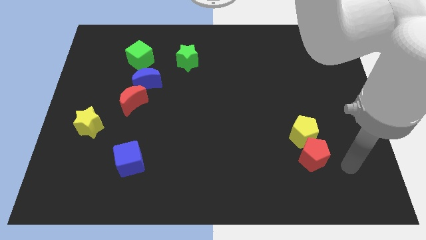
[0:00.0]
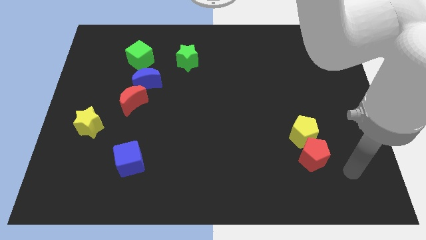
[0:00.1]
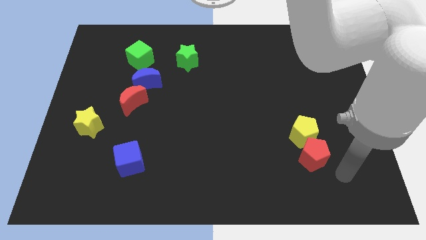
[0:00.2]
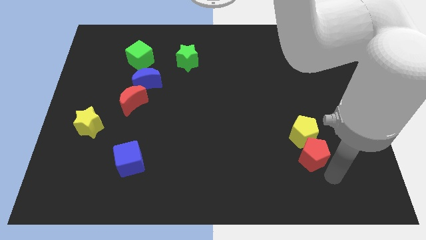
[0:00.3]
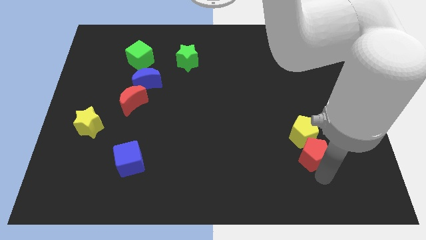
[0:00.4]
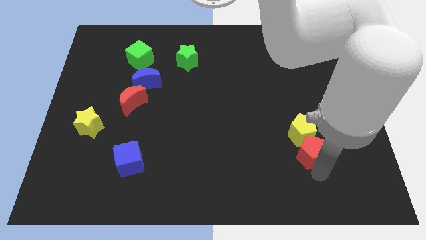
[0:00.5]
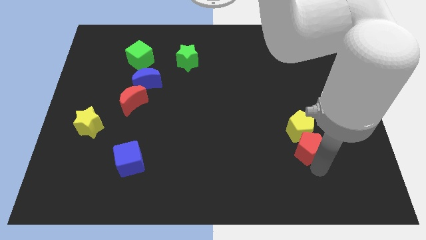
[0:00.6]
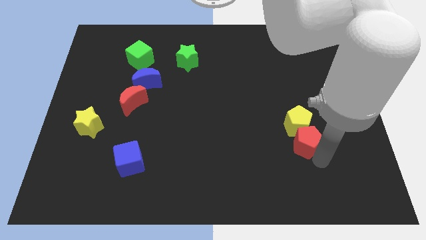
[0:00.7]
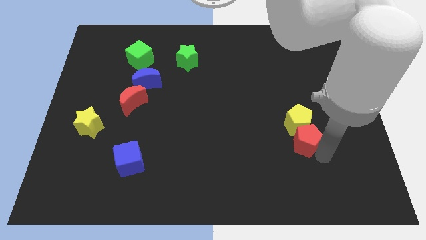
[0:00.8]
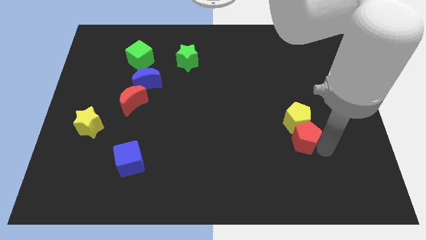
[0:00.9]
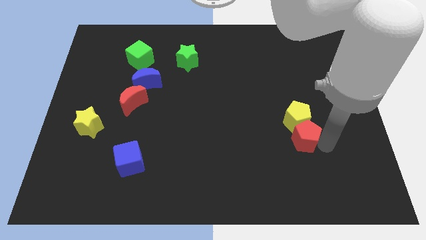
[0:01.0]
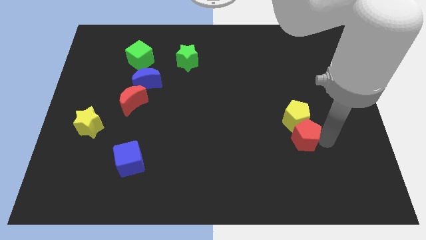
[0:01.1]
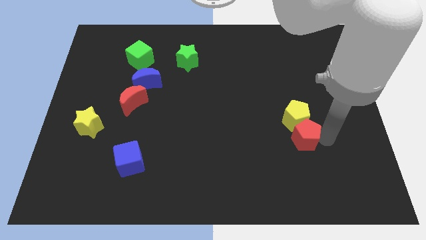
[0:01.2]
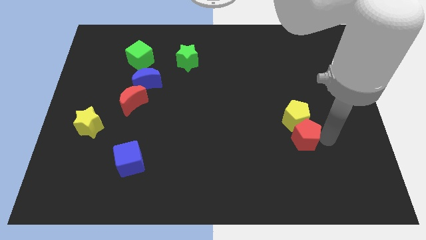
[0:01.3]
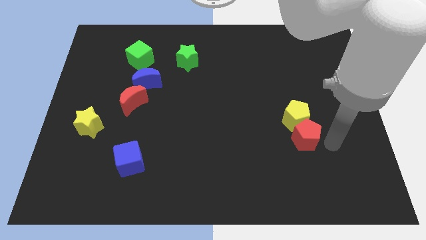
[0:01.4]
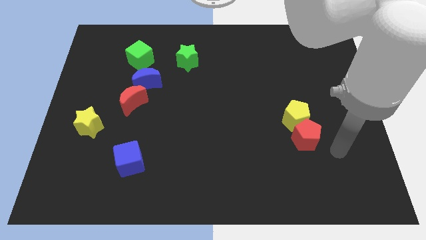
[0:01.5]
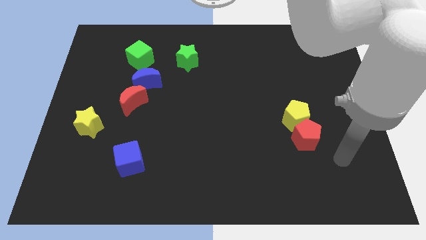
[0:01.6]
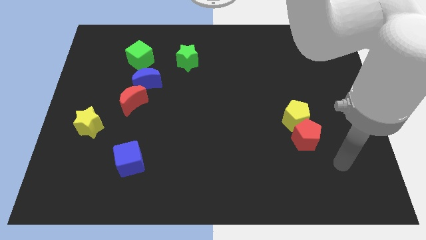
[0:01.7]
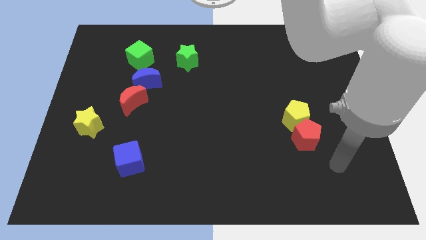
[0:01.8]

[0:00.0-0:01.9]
slightly push the yellow pentagon with the red pentagon towards the top

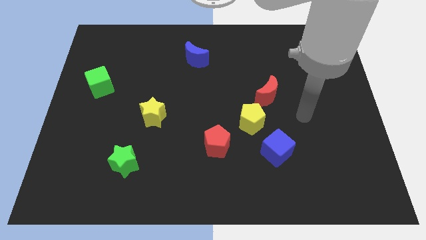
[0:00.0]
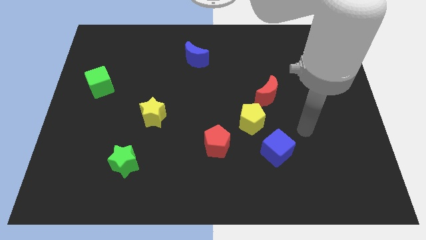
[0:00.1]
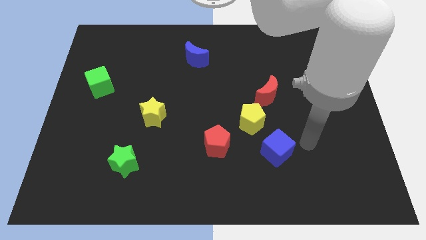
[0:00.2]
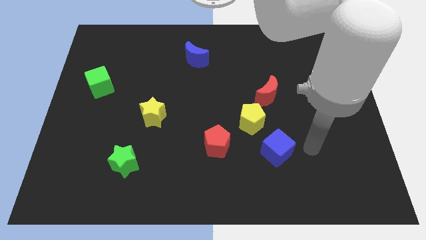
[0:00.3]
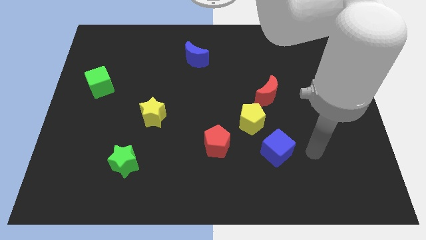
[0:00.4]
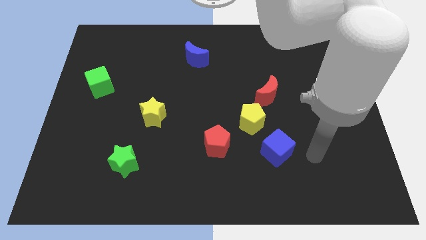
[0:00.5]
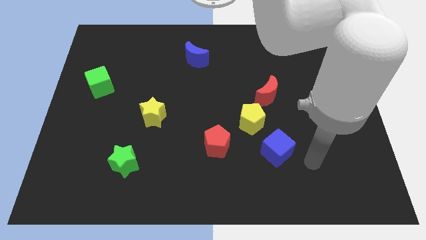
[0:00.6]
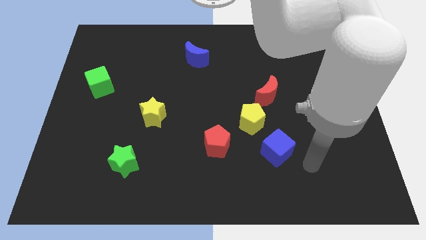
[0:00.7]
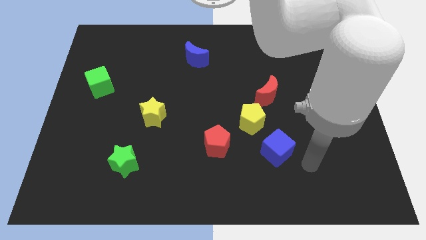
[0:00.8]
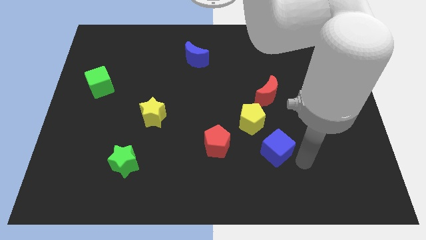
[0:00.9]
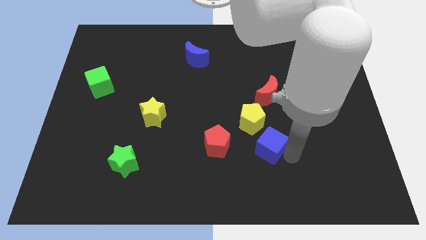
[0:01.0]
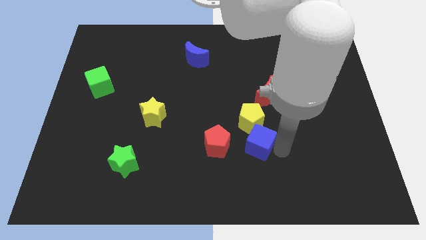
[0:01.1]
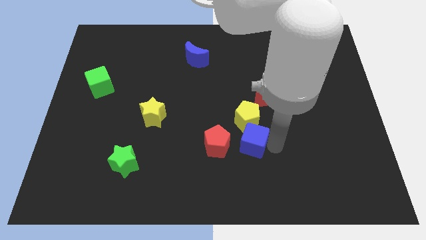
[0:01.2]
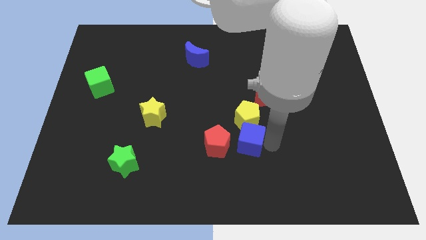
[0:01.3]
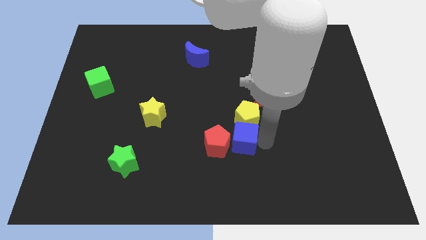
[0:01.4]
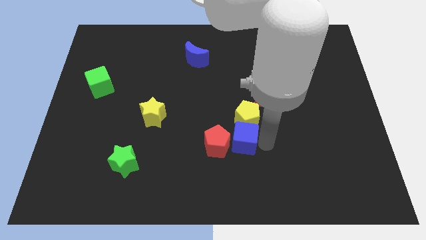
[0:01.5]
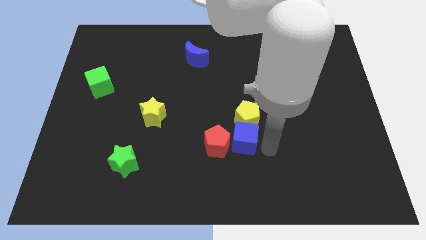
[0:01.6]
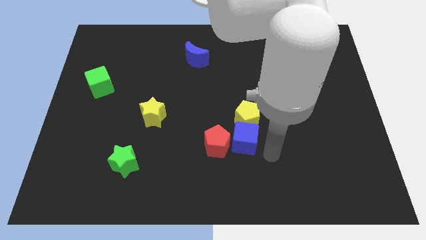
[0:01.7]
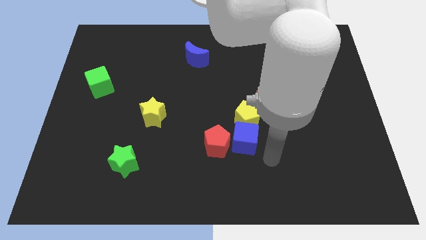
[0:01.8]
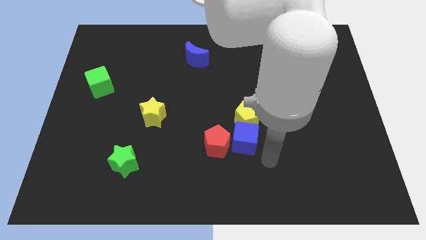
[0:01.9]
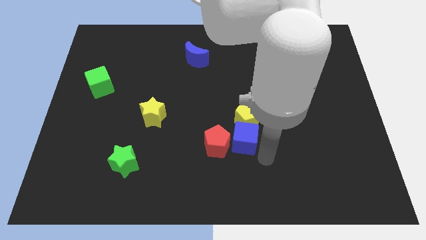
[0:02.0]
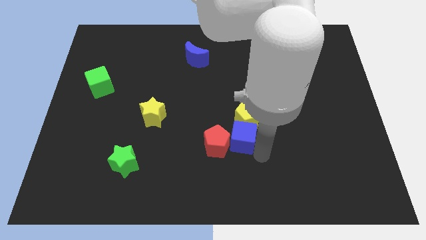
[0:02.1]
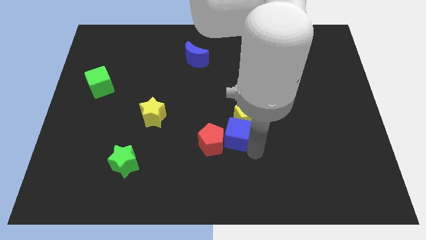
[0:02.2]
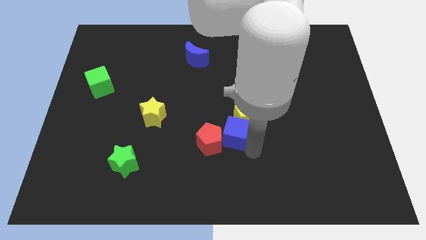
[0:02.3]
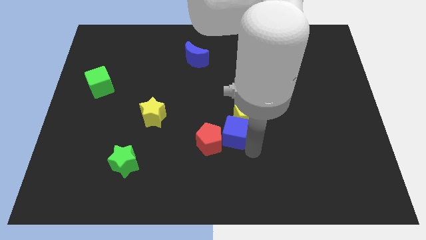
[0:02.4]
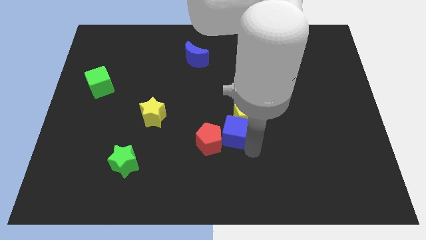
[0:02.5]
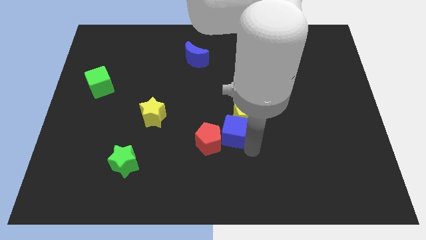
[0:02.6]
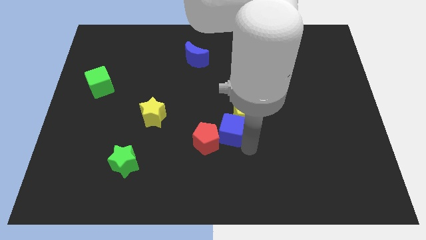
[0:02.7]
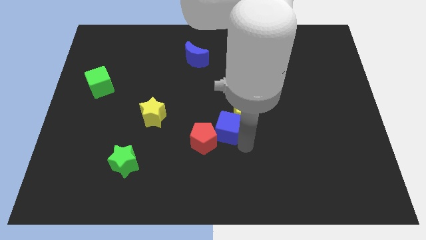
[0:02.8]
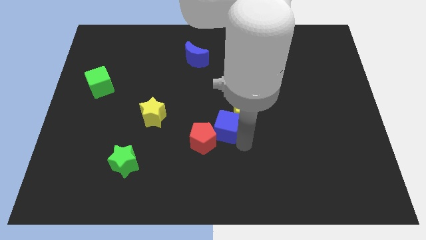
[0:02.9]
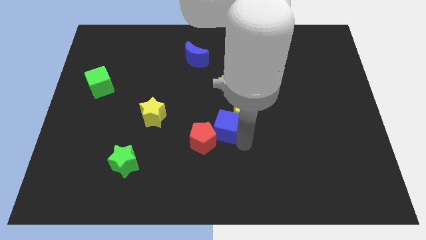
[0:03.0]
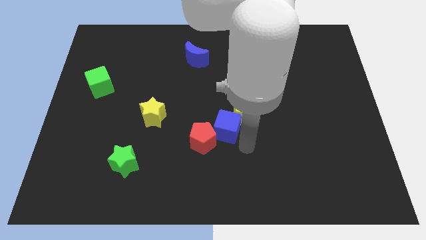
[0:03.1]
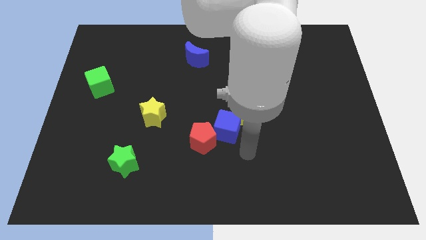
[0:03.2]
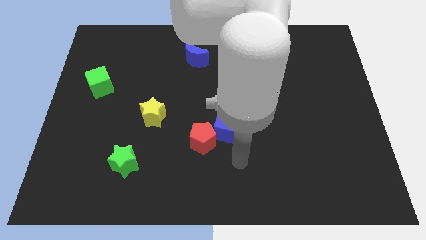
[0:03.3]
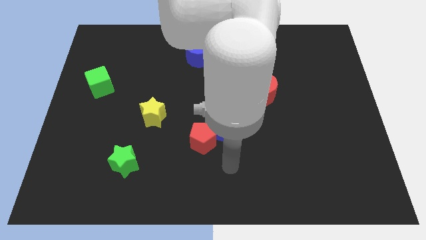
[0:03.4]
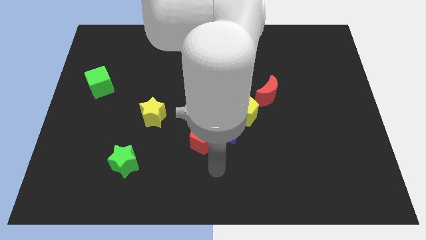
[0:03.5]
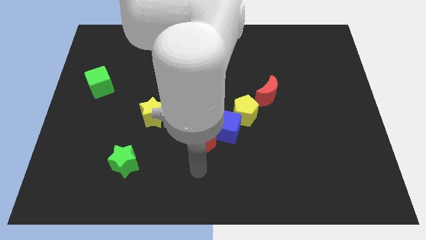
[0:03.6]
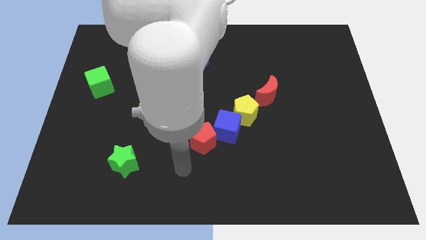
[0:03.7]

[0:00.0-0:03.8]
place the blue cube at the bottom left of the yellow pentagon

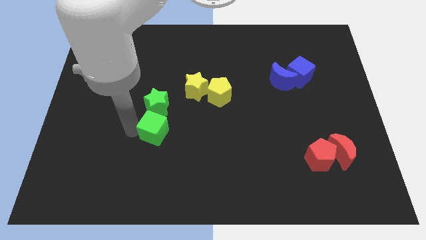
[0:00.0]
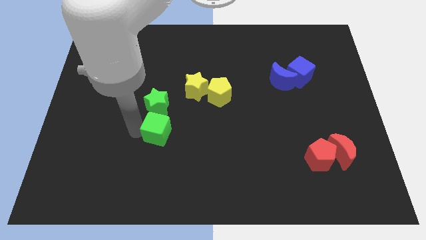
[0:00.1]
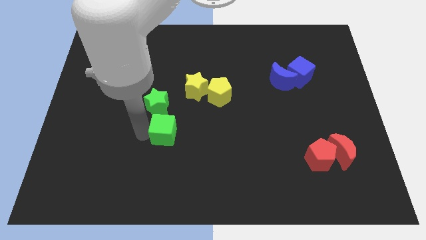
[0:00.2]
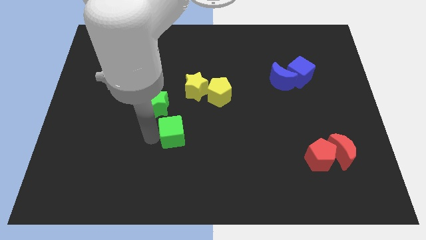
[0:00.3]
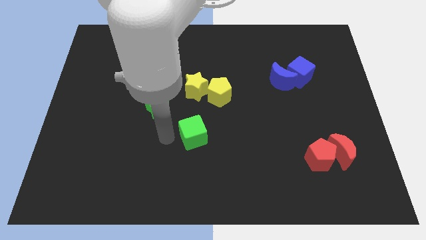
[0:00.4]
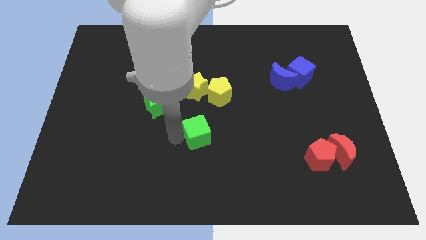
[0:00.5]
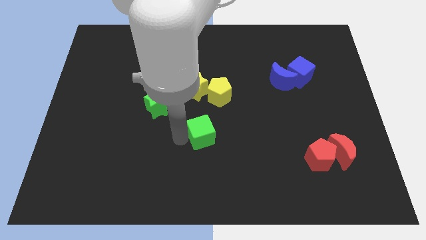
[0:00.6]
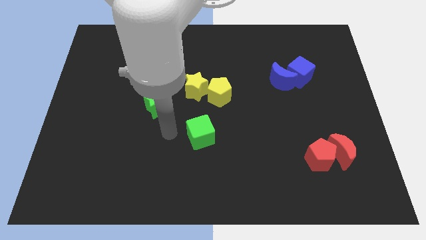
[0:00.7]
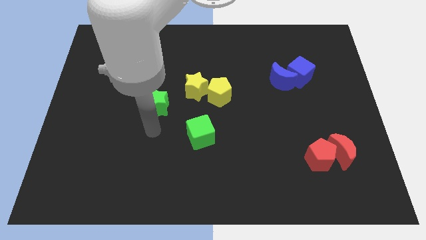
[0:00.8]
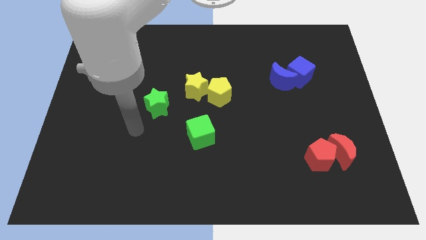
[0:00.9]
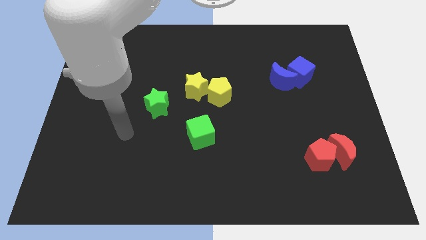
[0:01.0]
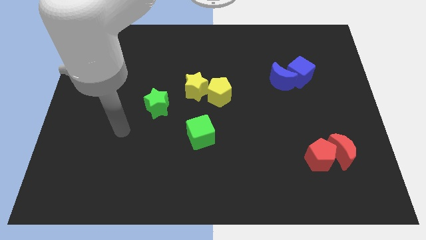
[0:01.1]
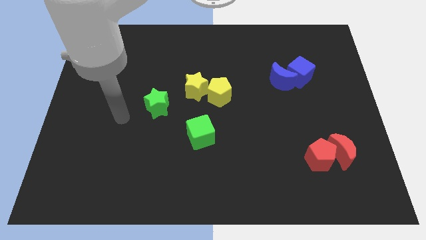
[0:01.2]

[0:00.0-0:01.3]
move the green cube to the center

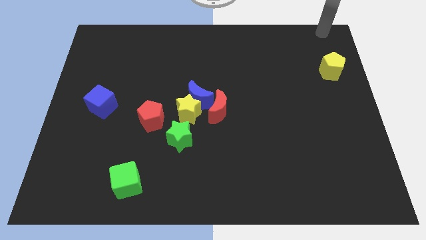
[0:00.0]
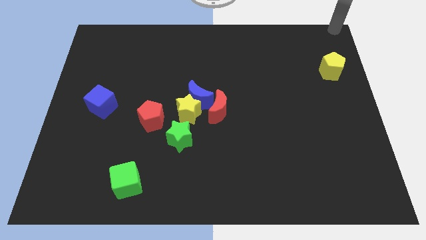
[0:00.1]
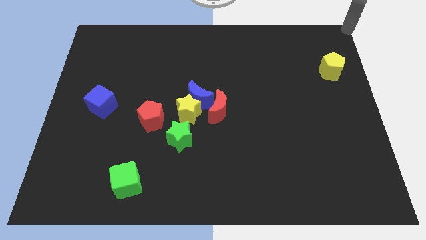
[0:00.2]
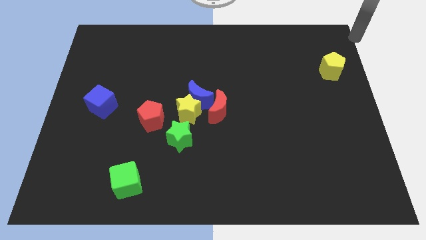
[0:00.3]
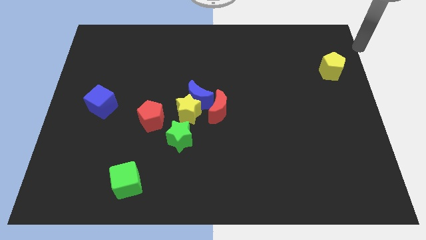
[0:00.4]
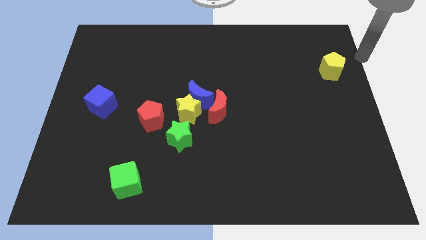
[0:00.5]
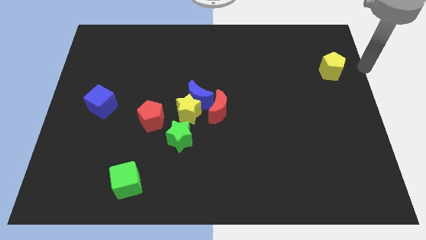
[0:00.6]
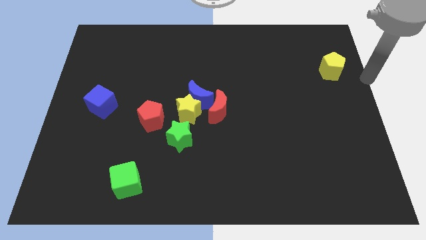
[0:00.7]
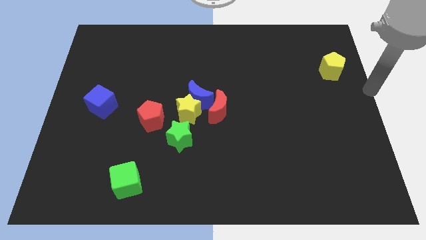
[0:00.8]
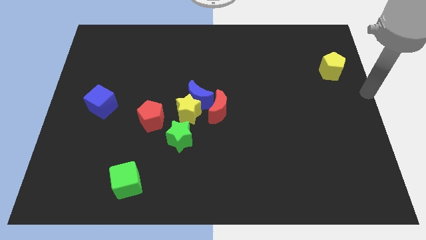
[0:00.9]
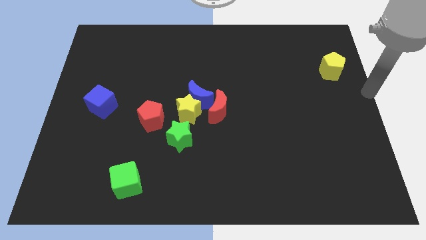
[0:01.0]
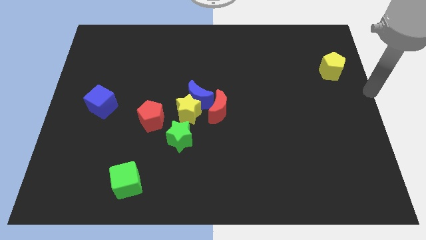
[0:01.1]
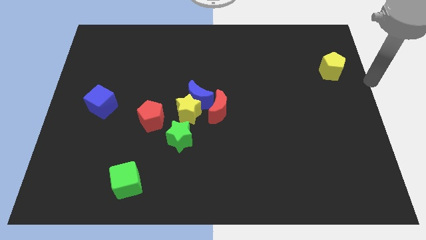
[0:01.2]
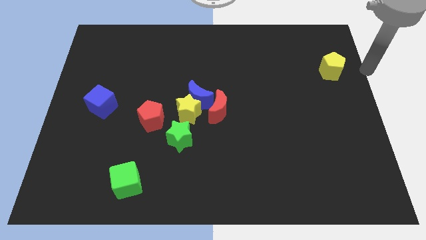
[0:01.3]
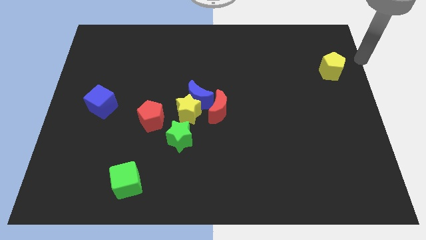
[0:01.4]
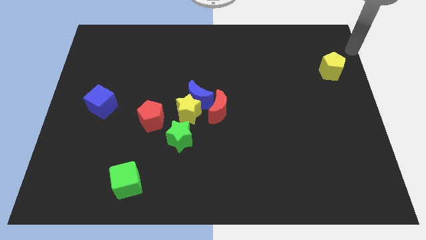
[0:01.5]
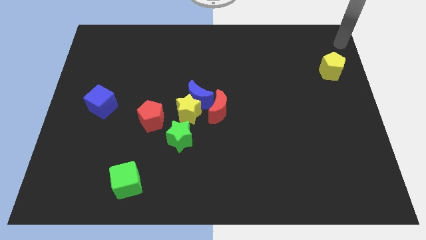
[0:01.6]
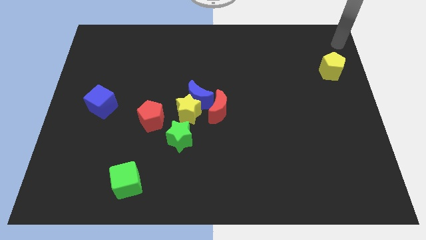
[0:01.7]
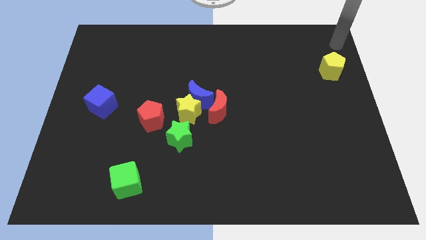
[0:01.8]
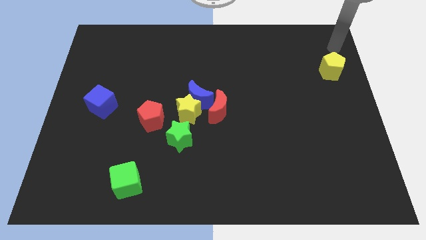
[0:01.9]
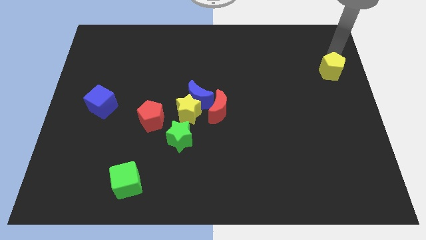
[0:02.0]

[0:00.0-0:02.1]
move your arm and point on top of yellow pentagon
